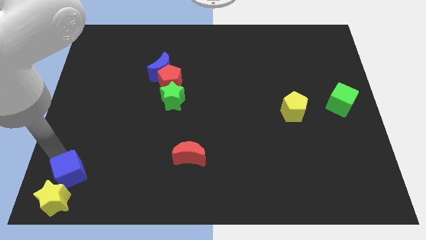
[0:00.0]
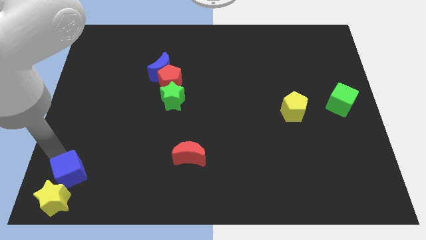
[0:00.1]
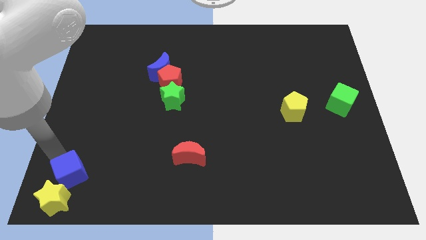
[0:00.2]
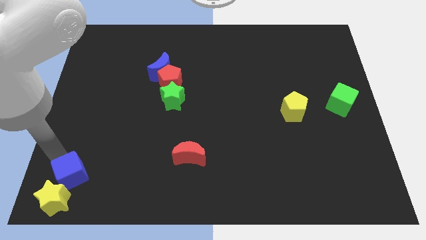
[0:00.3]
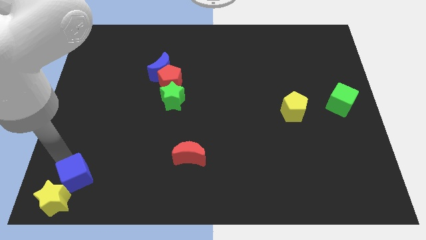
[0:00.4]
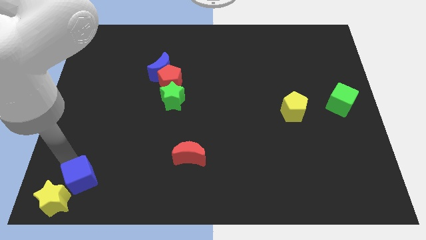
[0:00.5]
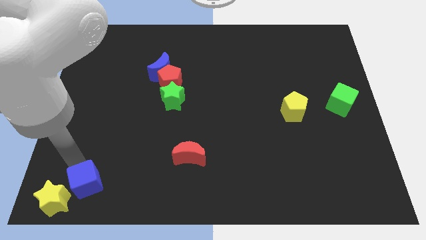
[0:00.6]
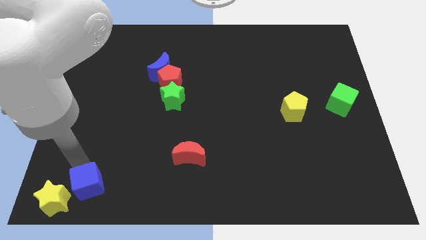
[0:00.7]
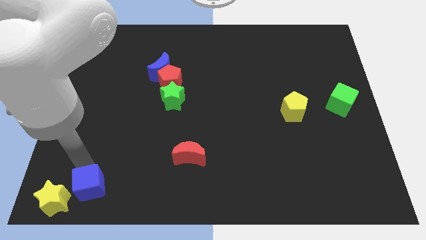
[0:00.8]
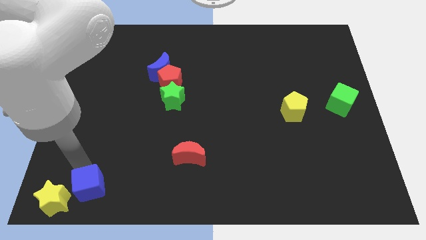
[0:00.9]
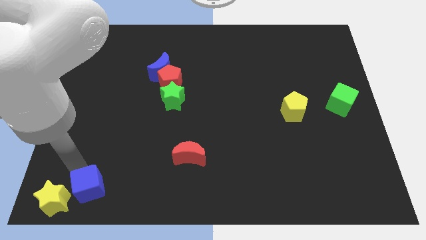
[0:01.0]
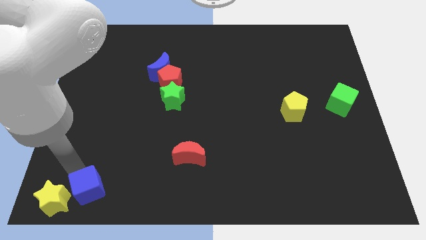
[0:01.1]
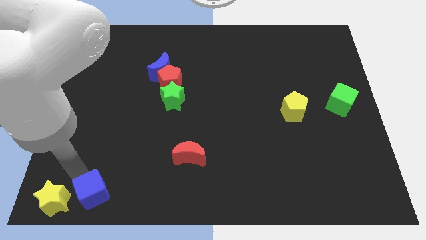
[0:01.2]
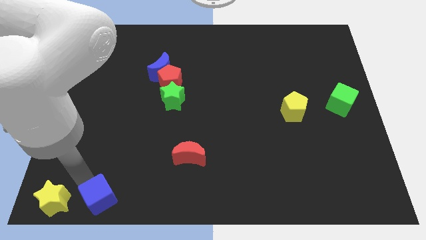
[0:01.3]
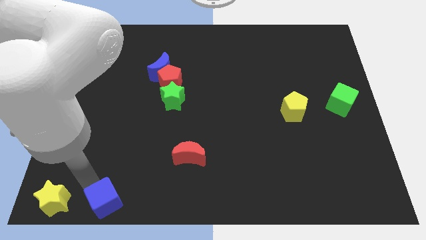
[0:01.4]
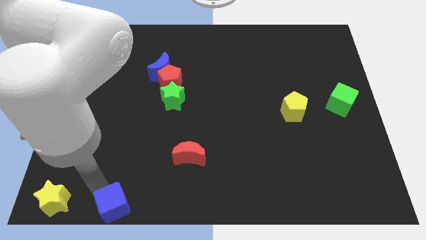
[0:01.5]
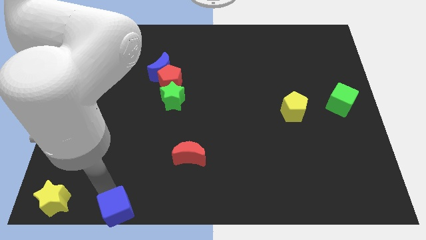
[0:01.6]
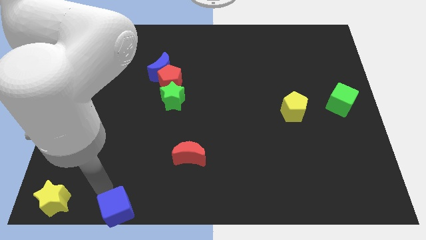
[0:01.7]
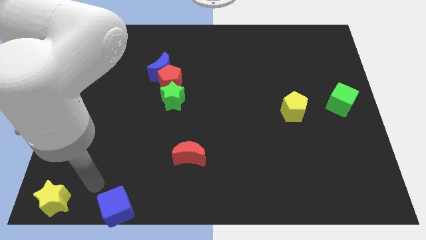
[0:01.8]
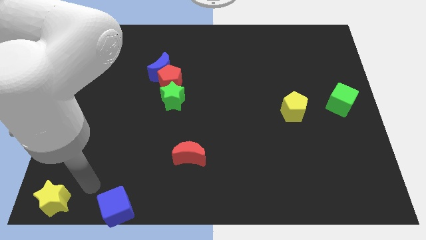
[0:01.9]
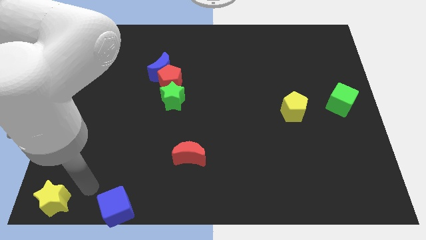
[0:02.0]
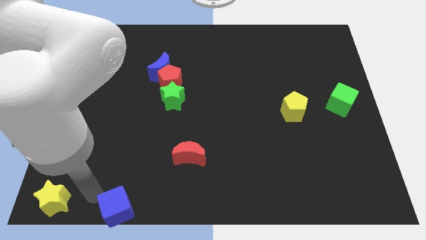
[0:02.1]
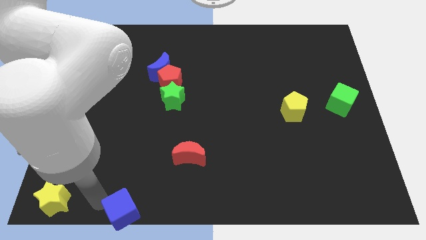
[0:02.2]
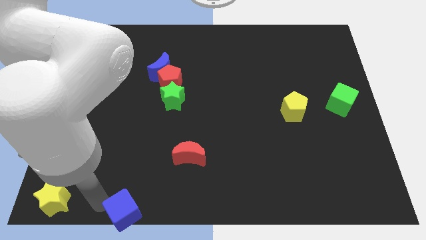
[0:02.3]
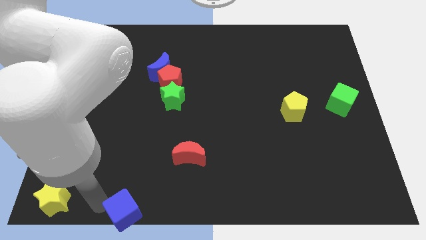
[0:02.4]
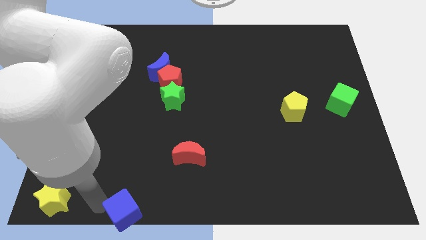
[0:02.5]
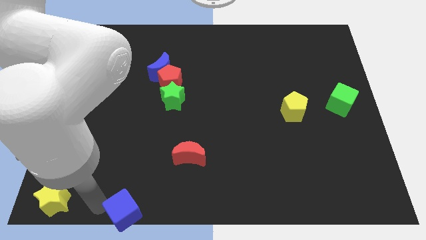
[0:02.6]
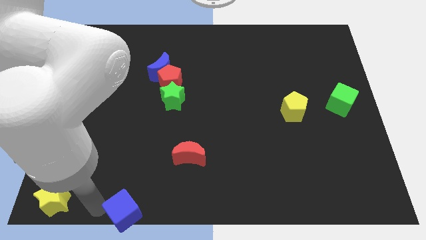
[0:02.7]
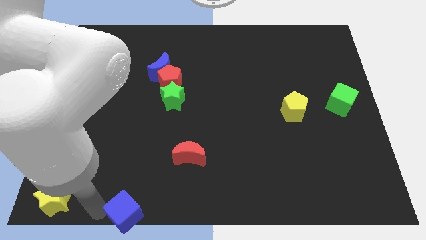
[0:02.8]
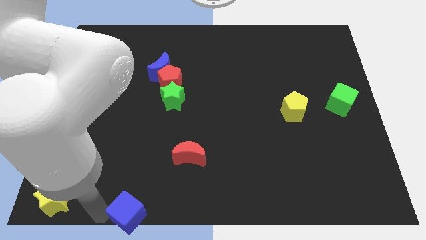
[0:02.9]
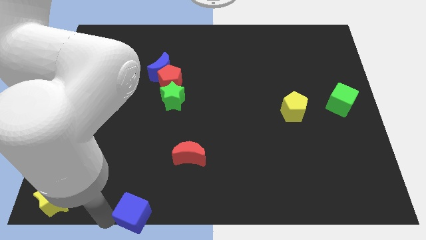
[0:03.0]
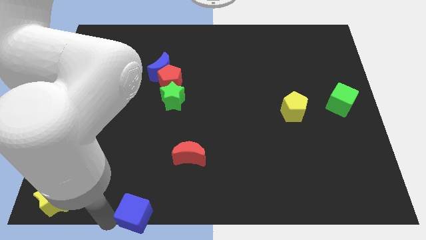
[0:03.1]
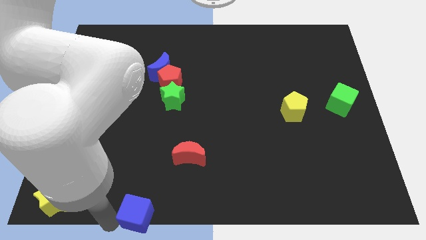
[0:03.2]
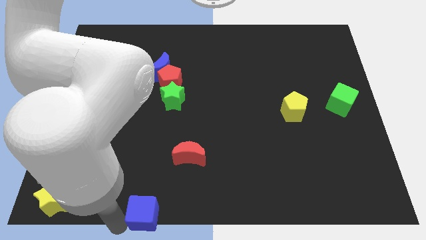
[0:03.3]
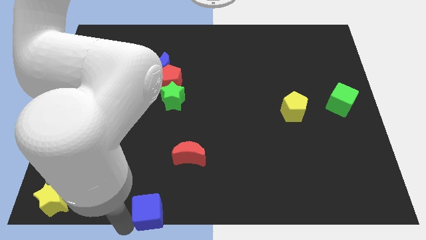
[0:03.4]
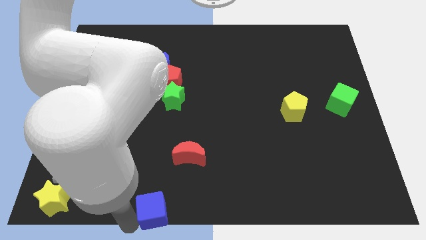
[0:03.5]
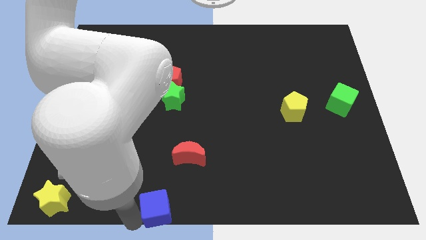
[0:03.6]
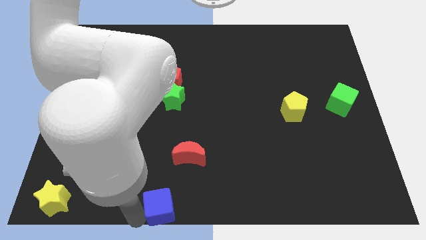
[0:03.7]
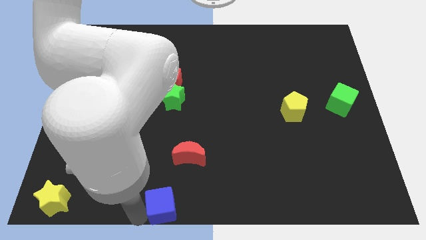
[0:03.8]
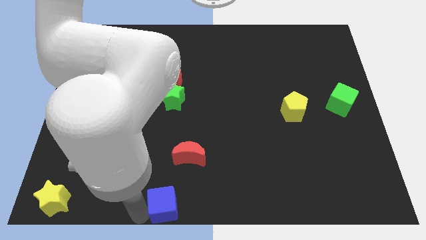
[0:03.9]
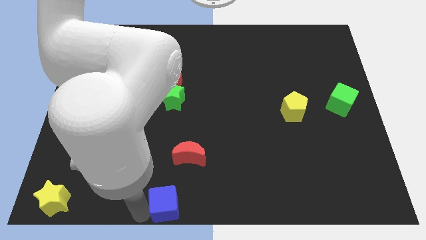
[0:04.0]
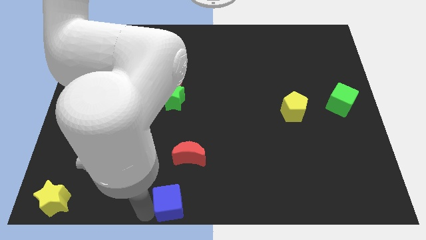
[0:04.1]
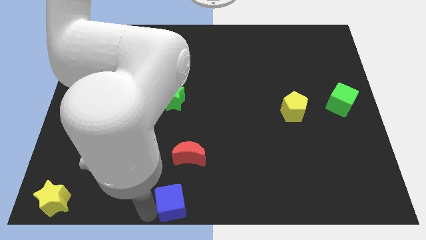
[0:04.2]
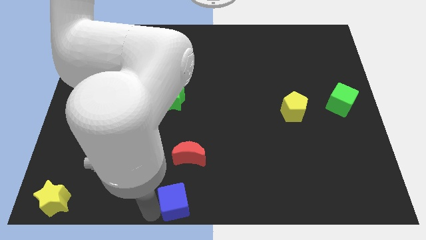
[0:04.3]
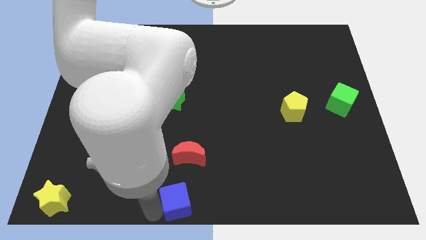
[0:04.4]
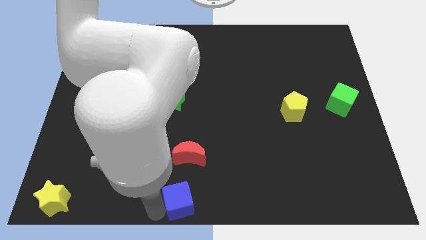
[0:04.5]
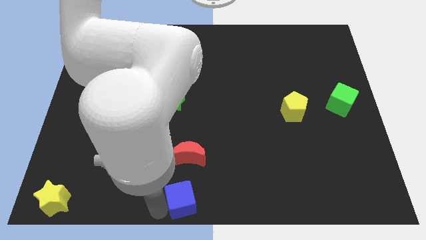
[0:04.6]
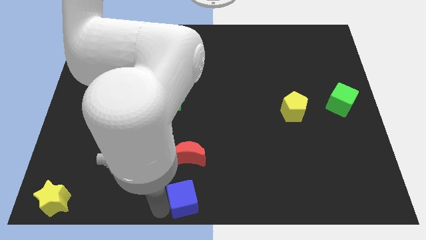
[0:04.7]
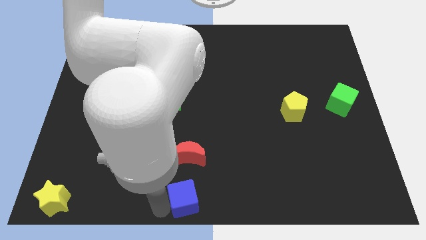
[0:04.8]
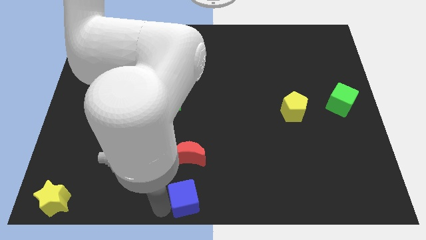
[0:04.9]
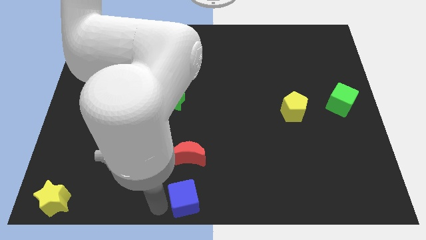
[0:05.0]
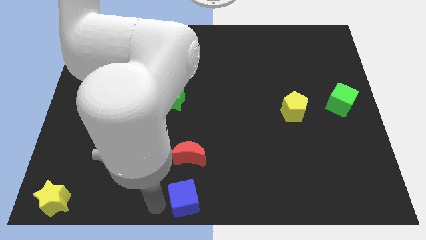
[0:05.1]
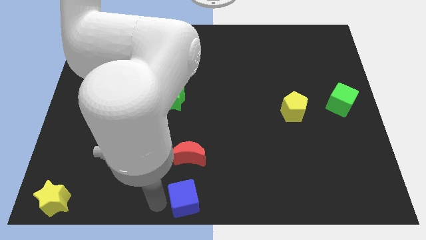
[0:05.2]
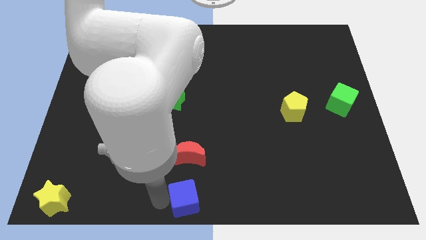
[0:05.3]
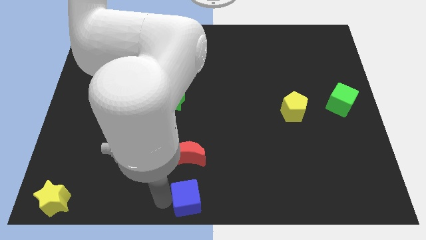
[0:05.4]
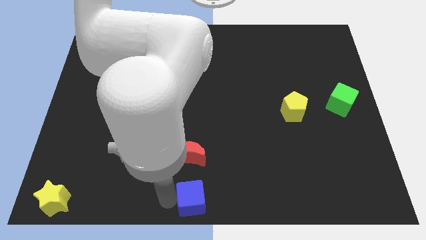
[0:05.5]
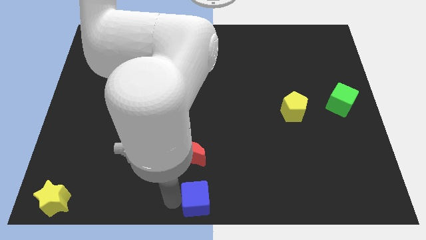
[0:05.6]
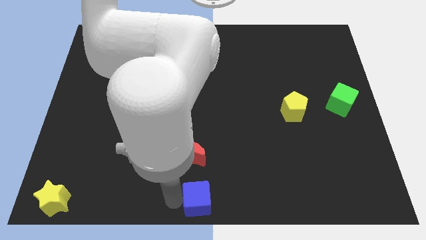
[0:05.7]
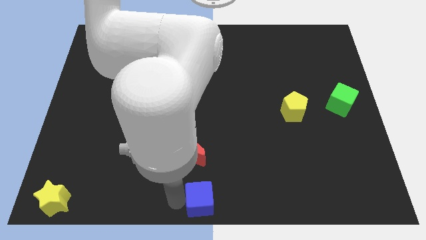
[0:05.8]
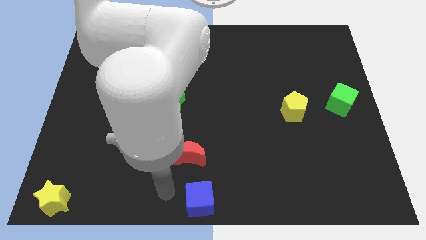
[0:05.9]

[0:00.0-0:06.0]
place the blue cube below the red moon

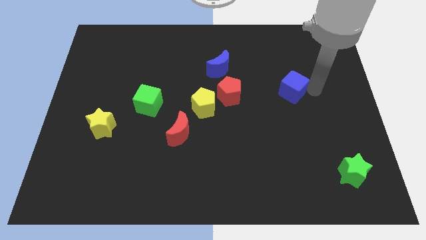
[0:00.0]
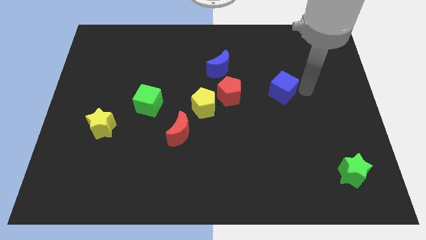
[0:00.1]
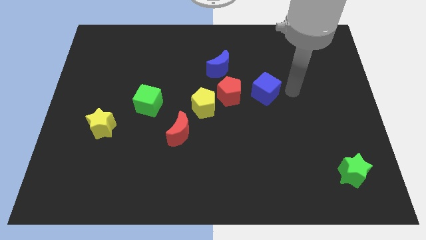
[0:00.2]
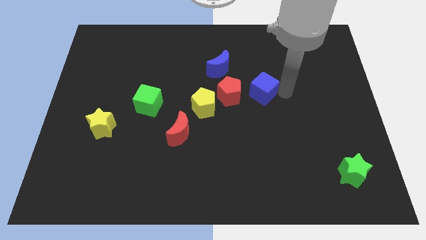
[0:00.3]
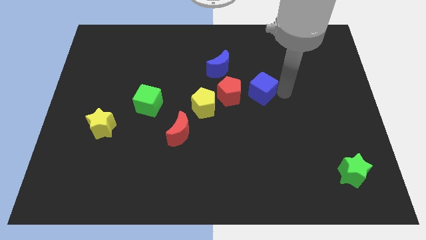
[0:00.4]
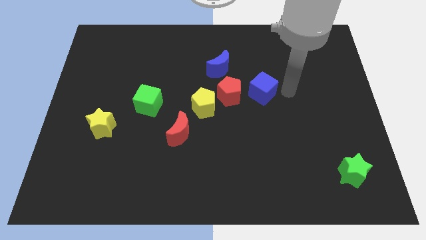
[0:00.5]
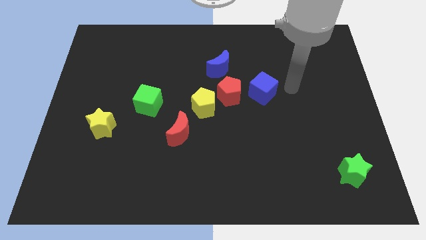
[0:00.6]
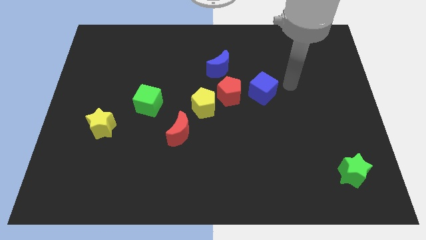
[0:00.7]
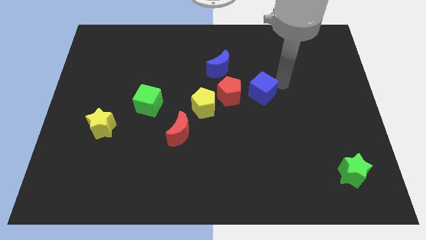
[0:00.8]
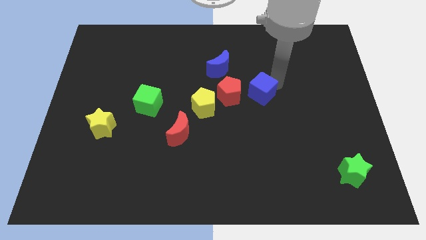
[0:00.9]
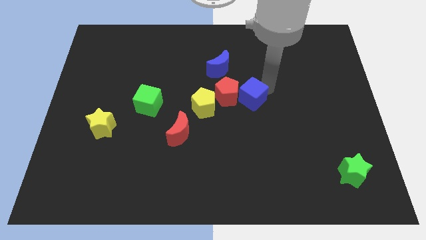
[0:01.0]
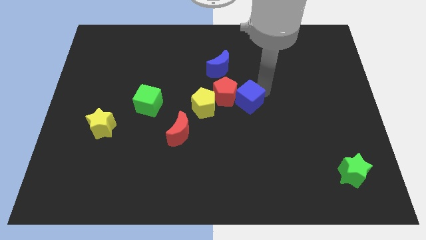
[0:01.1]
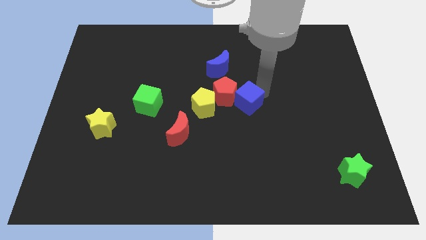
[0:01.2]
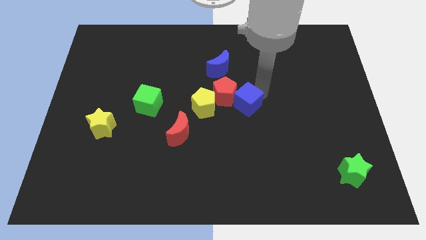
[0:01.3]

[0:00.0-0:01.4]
push blue cube into red pentagon

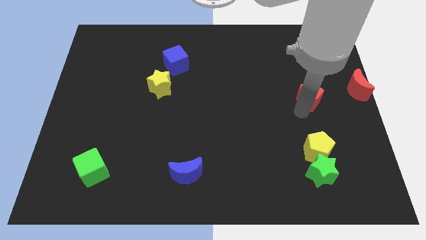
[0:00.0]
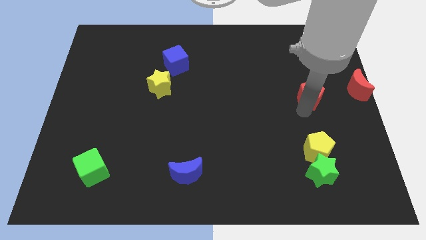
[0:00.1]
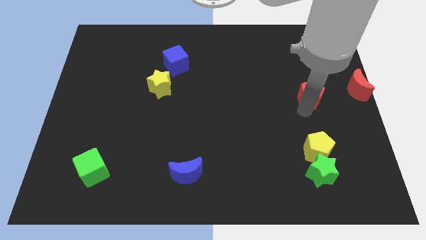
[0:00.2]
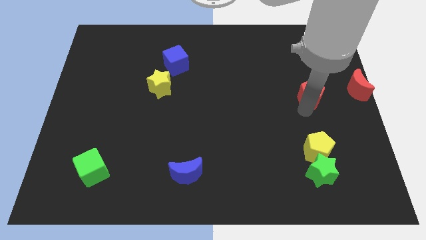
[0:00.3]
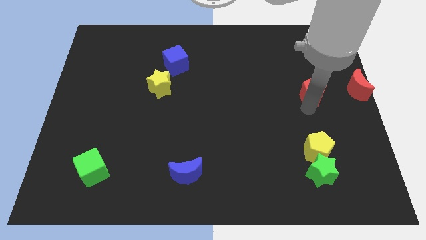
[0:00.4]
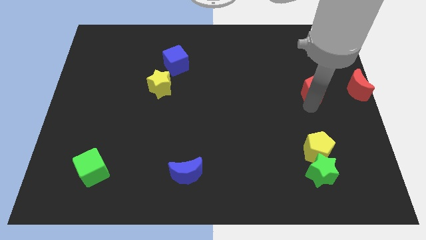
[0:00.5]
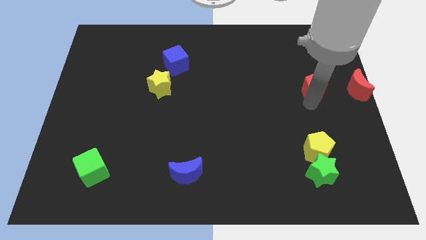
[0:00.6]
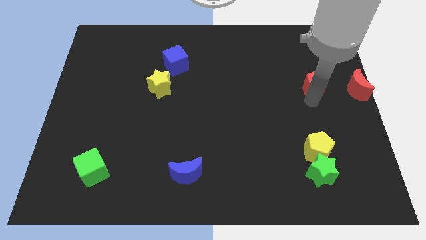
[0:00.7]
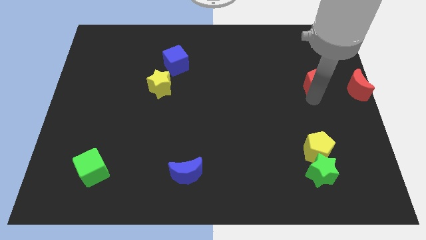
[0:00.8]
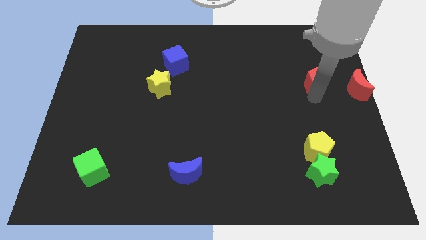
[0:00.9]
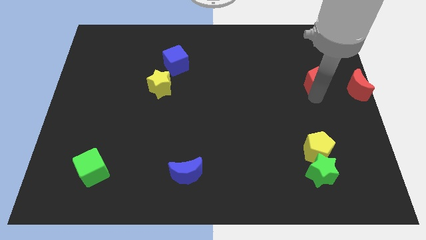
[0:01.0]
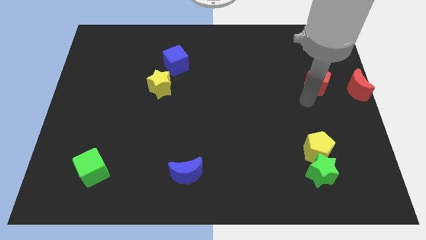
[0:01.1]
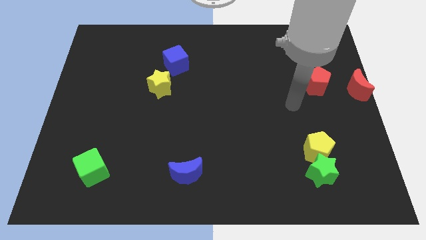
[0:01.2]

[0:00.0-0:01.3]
push the red pentagon to the left of the red crescent

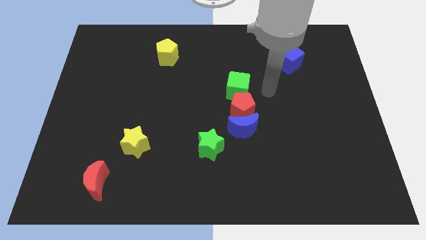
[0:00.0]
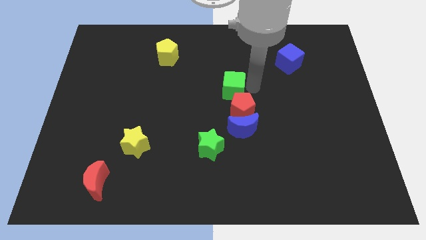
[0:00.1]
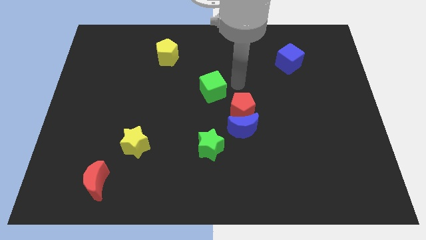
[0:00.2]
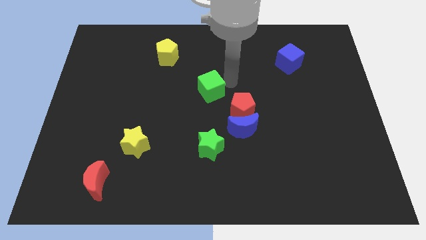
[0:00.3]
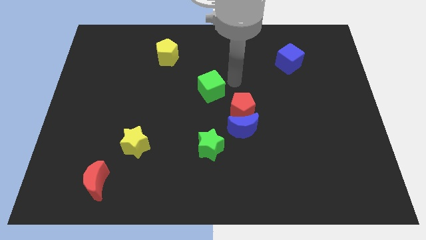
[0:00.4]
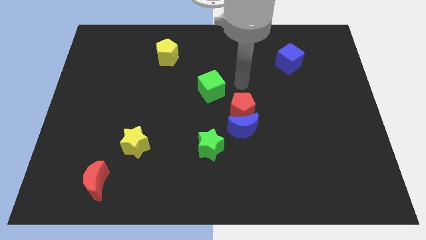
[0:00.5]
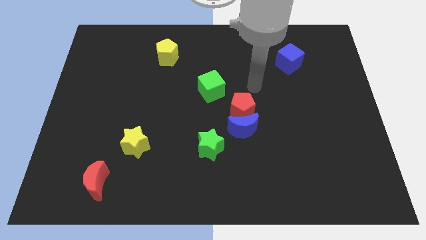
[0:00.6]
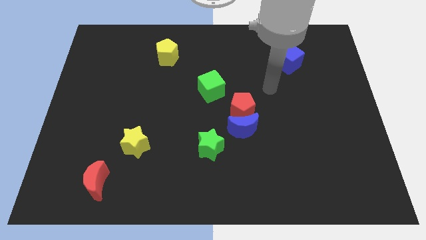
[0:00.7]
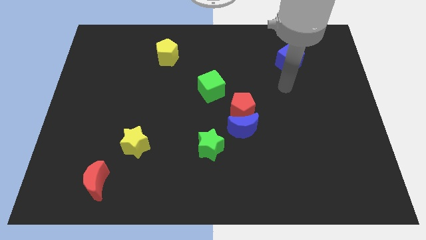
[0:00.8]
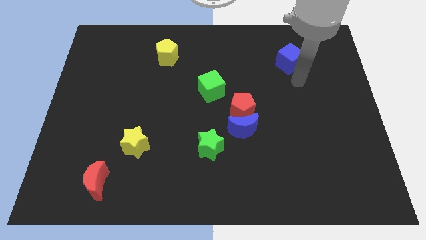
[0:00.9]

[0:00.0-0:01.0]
move the green cube to the left
